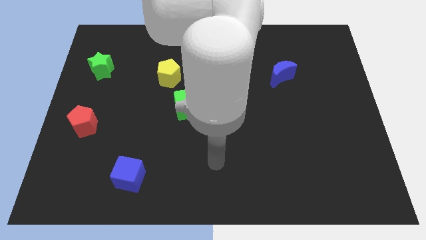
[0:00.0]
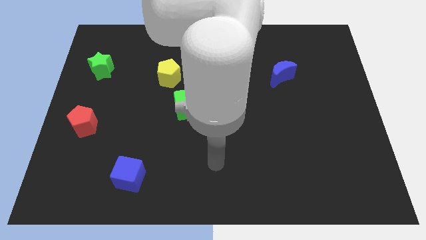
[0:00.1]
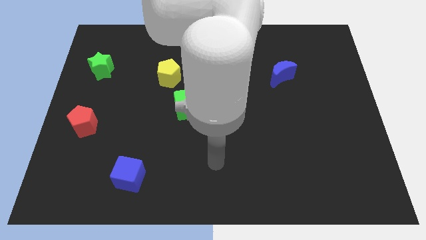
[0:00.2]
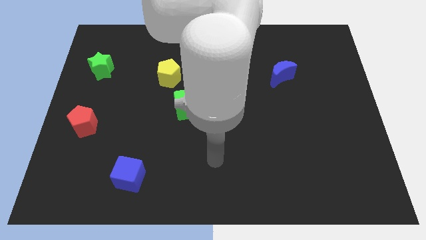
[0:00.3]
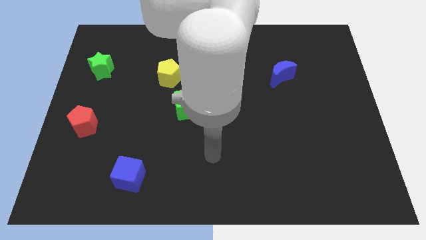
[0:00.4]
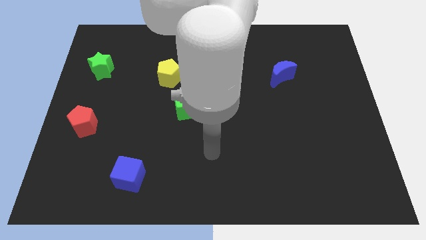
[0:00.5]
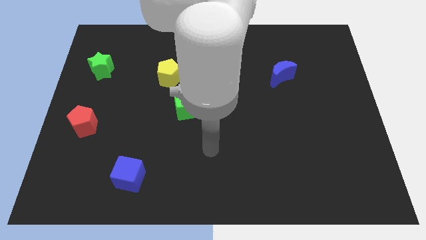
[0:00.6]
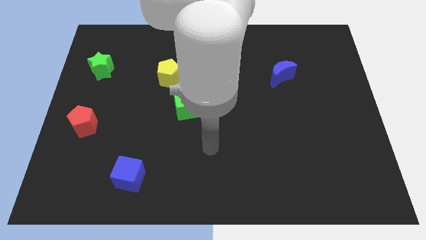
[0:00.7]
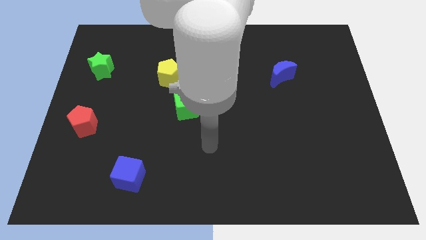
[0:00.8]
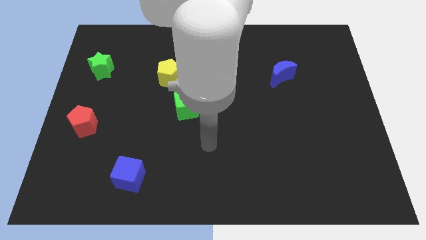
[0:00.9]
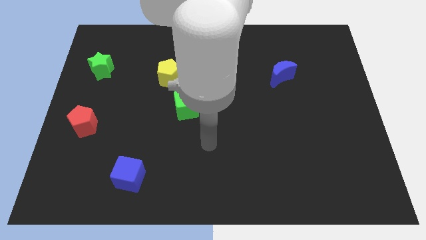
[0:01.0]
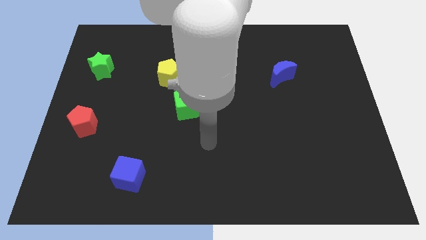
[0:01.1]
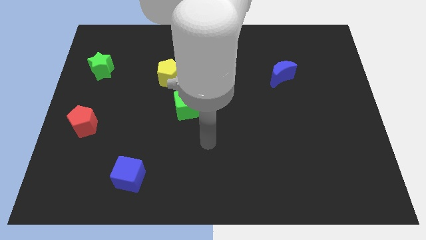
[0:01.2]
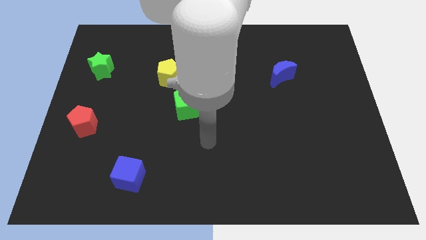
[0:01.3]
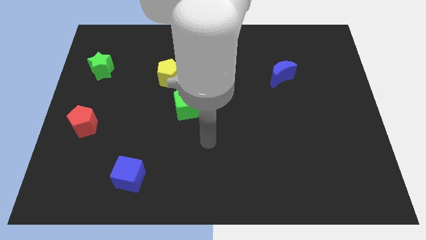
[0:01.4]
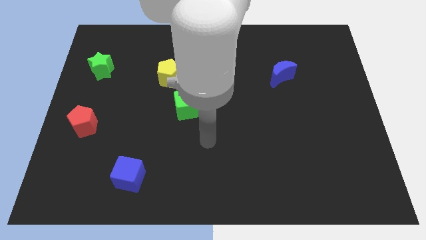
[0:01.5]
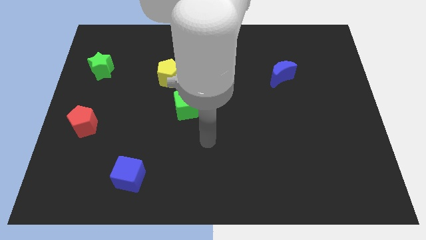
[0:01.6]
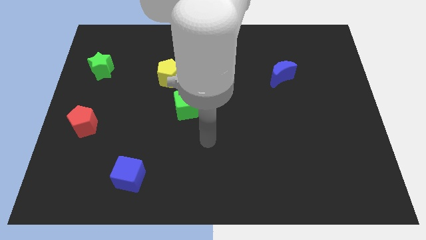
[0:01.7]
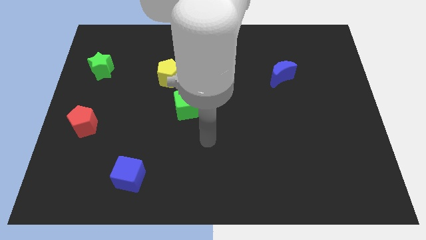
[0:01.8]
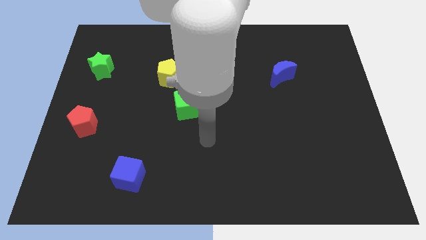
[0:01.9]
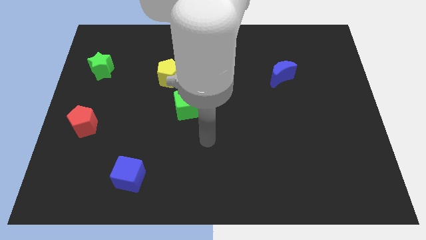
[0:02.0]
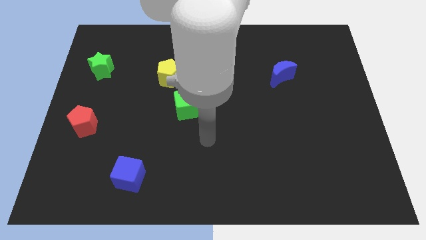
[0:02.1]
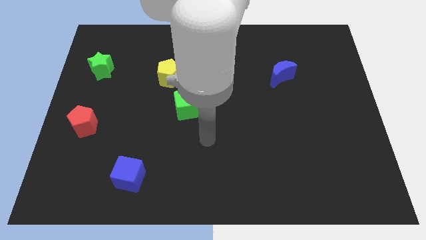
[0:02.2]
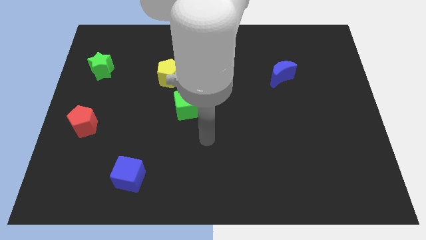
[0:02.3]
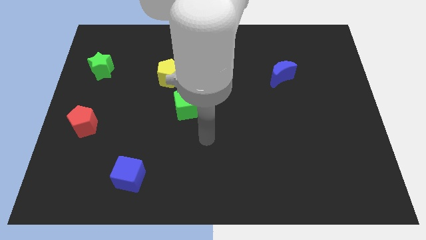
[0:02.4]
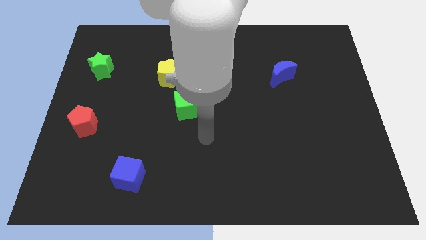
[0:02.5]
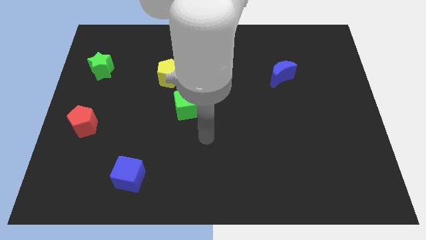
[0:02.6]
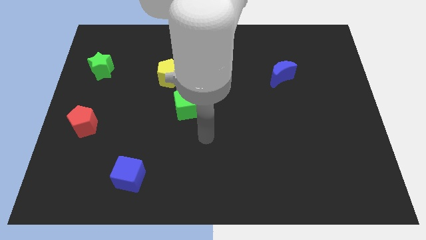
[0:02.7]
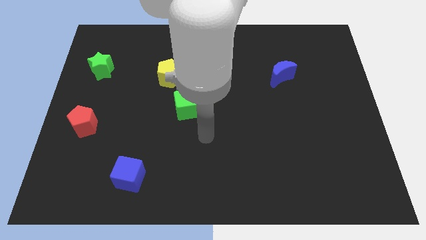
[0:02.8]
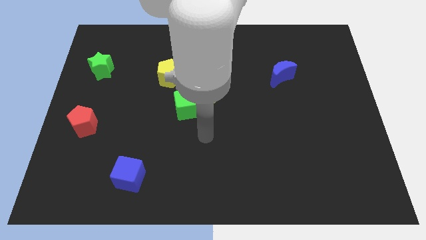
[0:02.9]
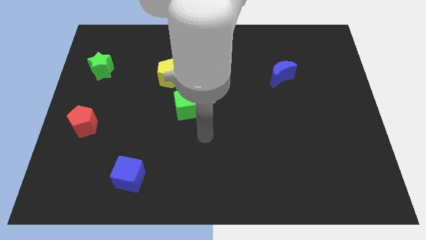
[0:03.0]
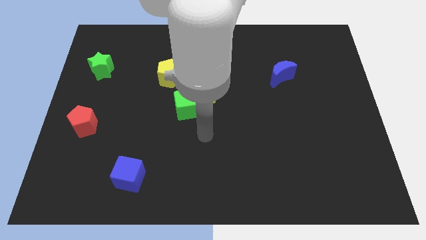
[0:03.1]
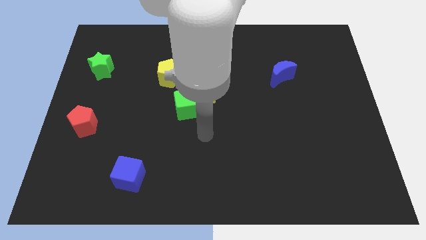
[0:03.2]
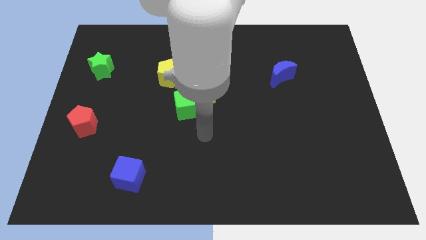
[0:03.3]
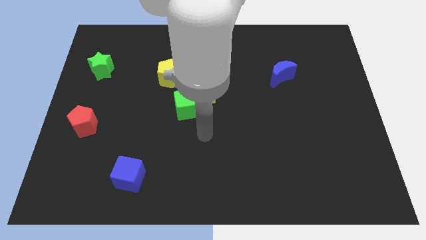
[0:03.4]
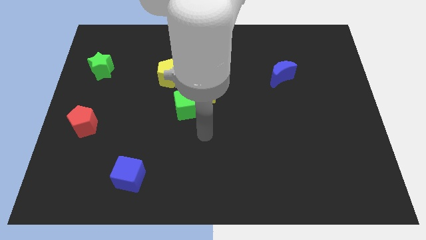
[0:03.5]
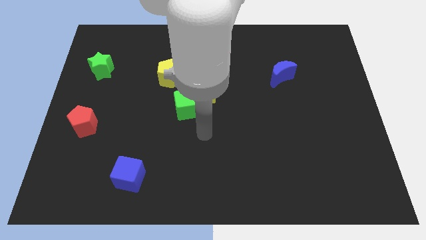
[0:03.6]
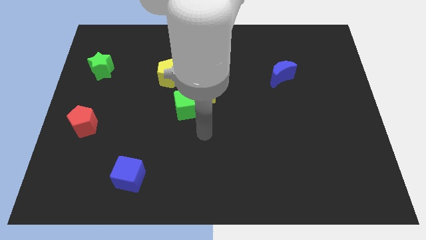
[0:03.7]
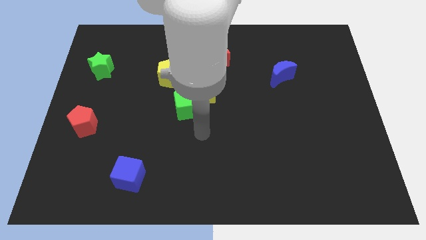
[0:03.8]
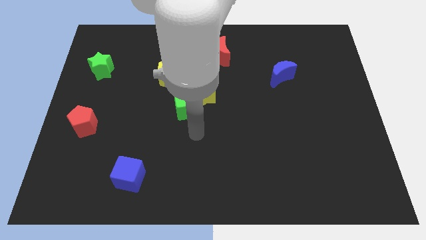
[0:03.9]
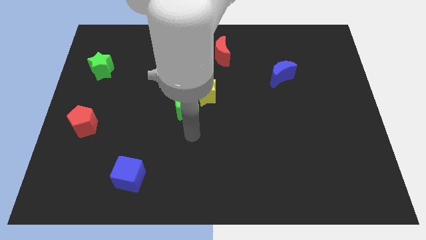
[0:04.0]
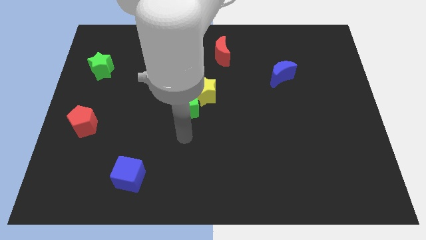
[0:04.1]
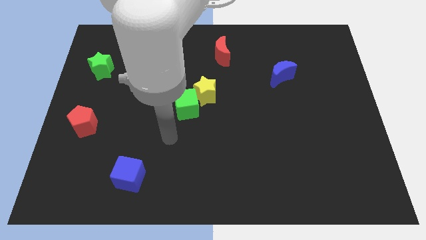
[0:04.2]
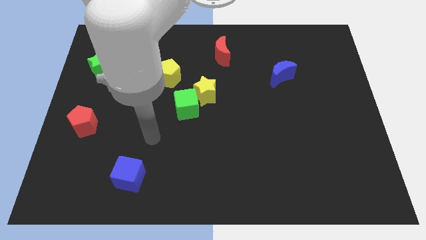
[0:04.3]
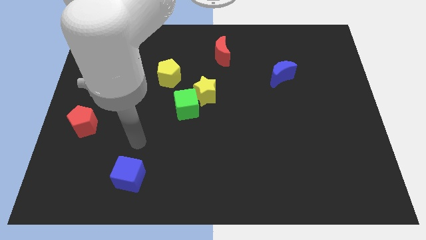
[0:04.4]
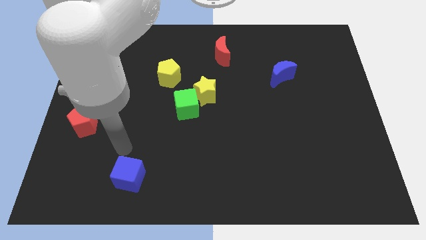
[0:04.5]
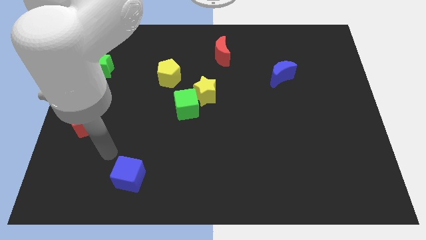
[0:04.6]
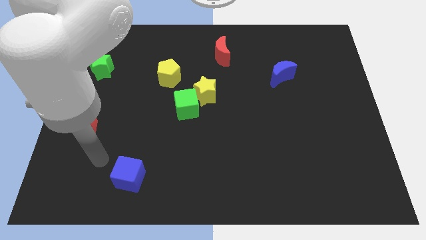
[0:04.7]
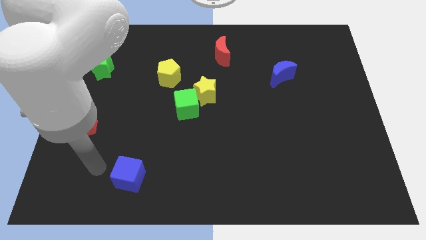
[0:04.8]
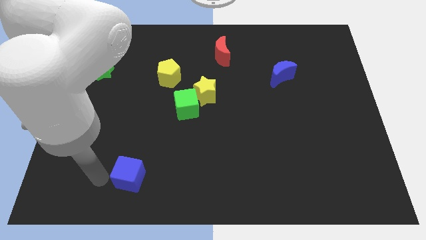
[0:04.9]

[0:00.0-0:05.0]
move your arm towards the blue cube

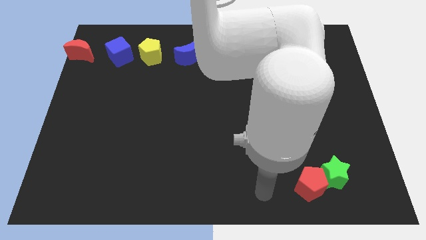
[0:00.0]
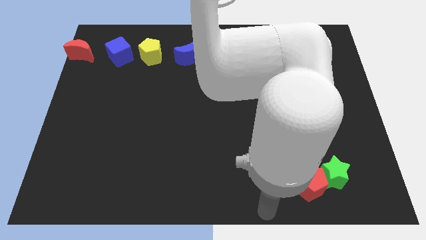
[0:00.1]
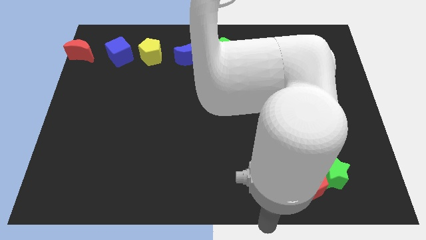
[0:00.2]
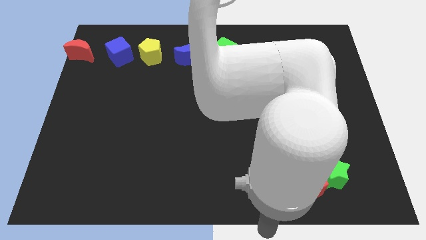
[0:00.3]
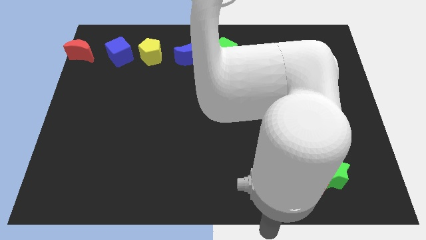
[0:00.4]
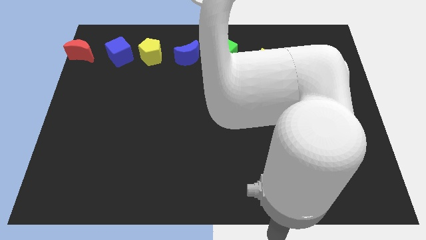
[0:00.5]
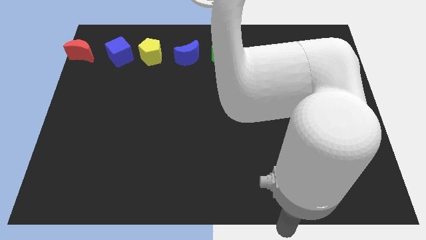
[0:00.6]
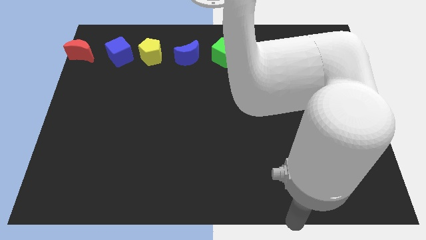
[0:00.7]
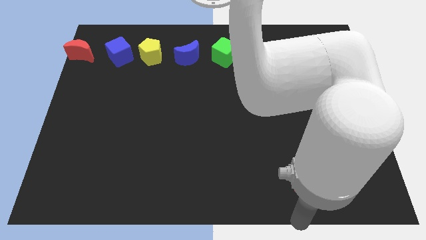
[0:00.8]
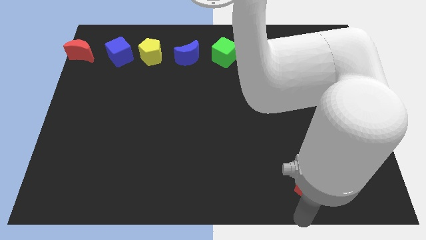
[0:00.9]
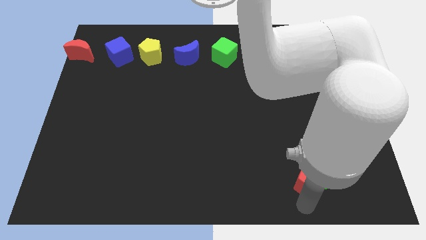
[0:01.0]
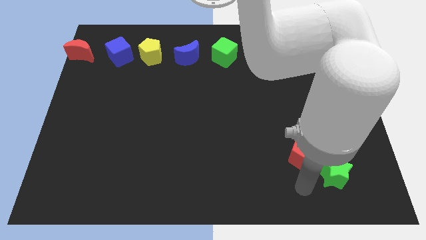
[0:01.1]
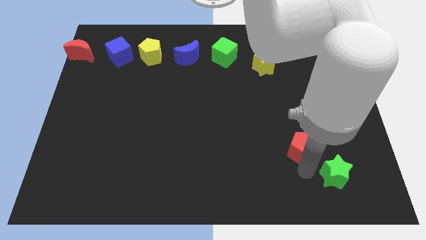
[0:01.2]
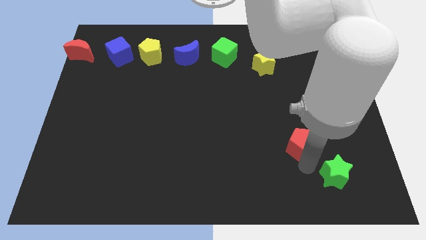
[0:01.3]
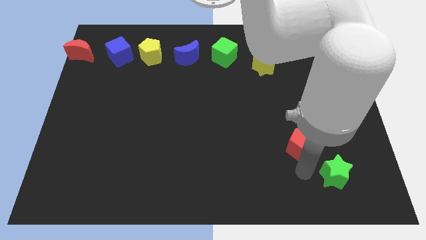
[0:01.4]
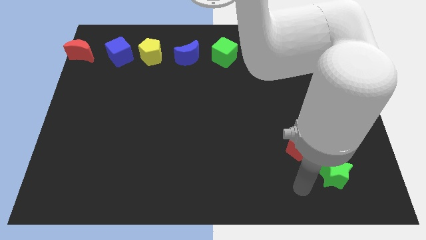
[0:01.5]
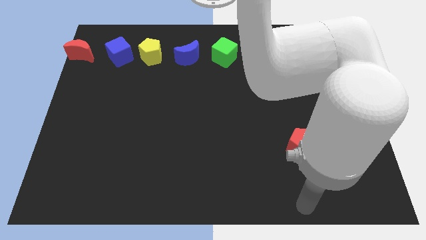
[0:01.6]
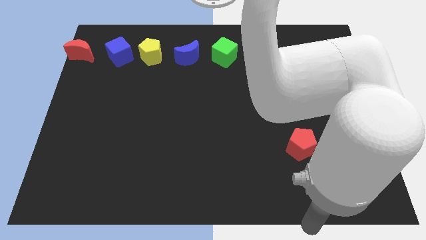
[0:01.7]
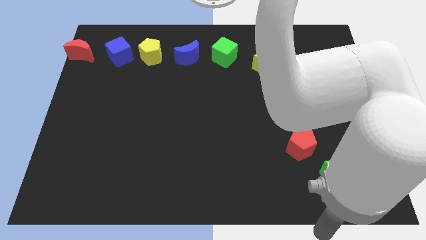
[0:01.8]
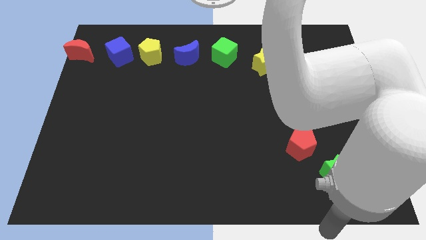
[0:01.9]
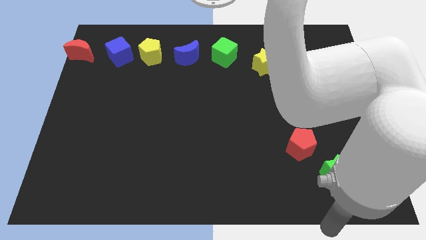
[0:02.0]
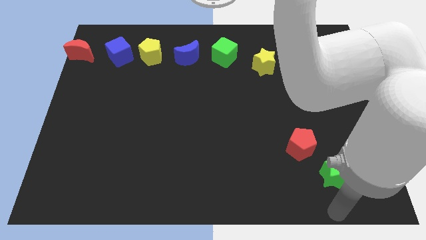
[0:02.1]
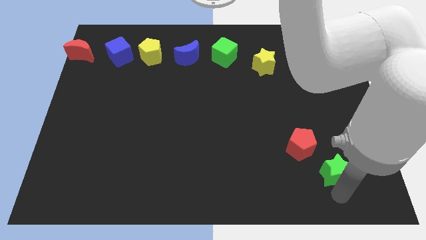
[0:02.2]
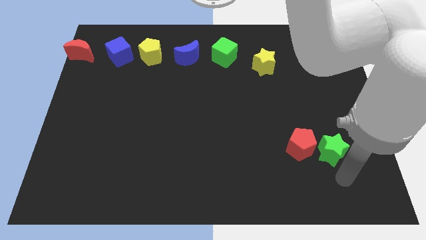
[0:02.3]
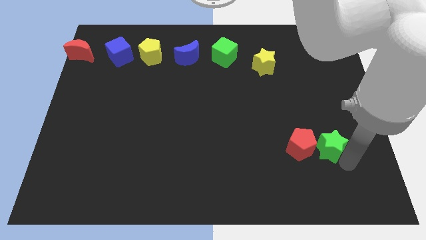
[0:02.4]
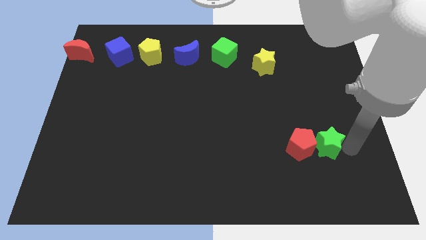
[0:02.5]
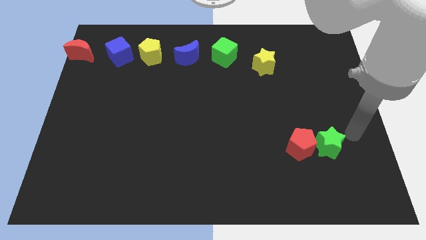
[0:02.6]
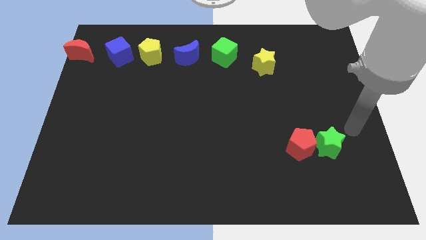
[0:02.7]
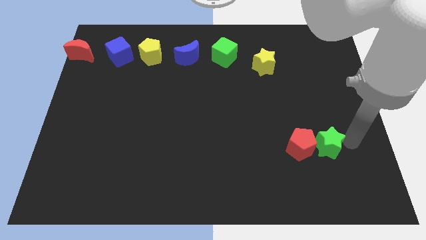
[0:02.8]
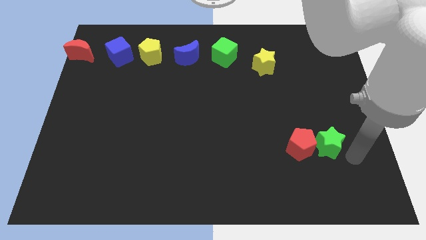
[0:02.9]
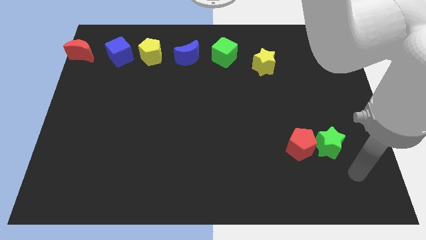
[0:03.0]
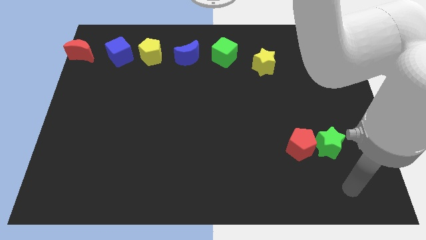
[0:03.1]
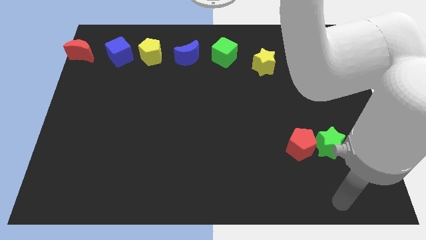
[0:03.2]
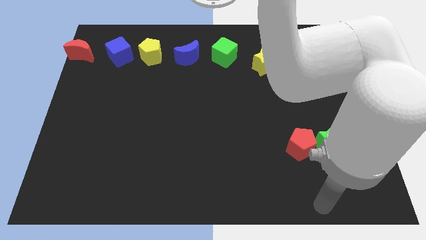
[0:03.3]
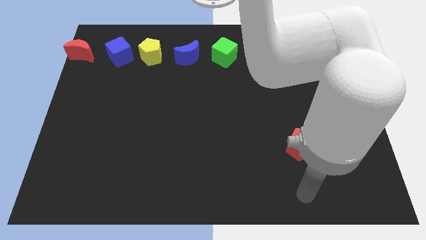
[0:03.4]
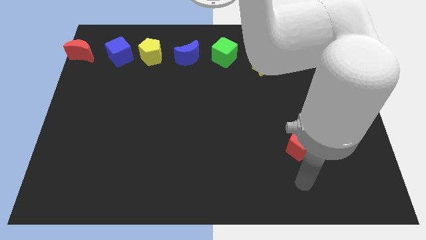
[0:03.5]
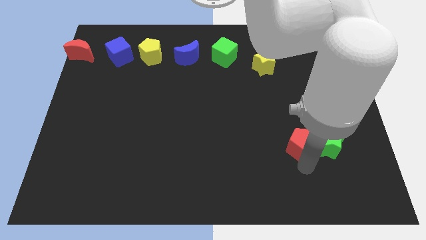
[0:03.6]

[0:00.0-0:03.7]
push the red pentagon and green star towards the top side of the board
